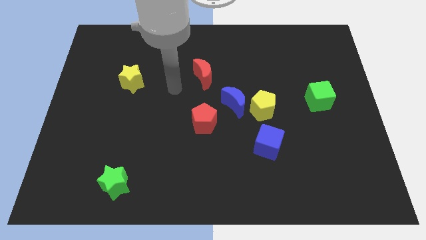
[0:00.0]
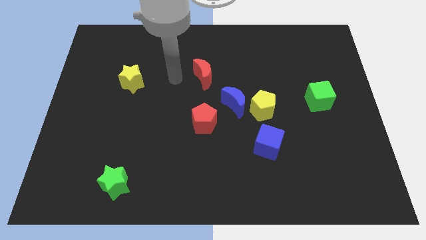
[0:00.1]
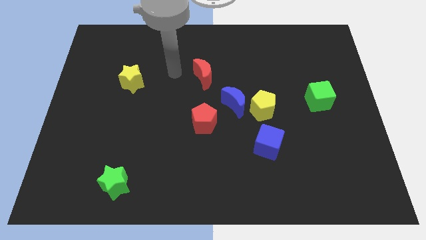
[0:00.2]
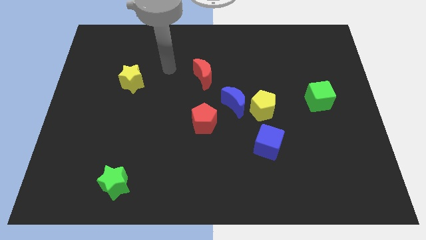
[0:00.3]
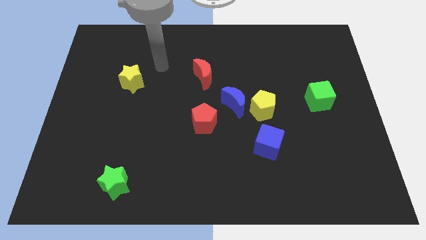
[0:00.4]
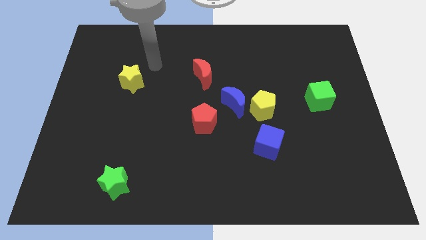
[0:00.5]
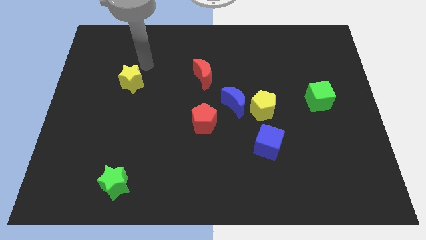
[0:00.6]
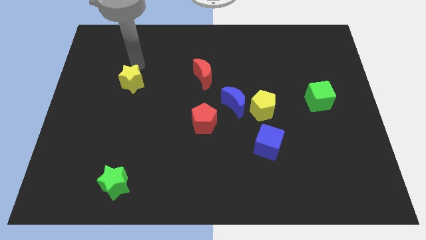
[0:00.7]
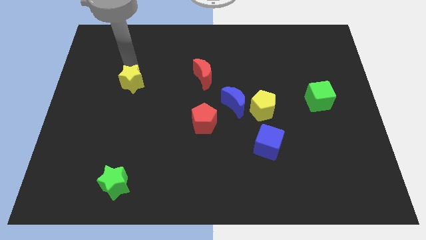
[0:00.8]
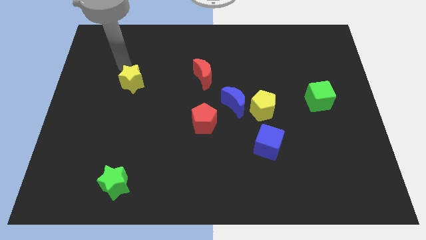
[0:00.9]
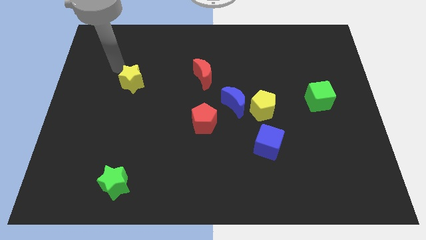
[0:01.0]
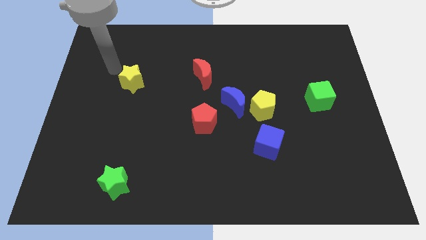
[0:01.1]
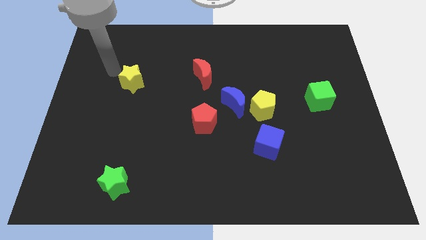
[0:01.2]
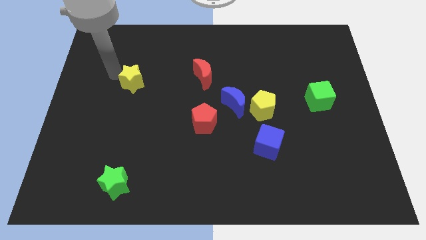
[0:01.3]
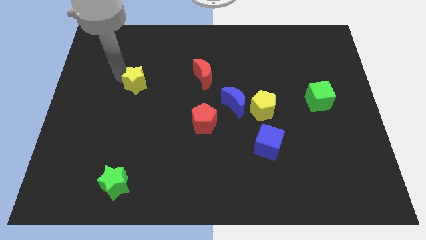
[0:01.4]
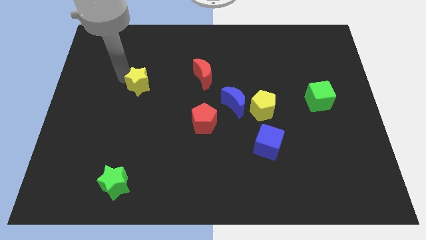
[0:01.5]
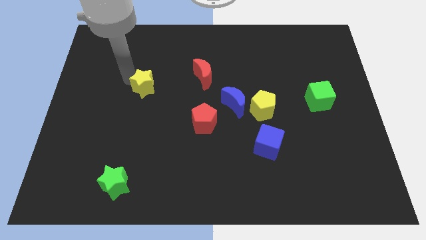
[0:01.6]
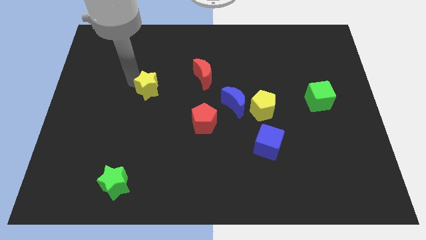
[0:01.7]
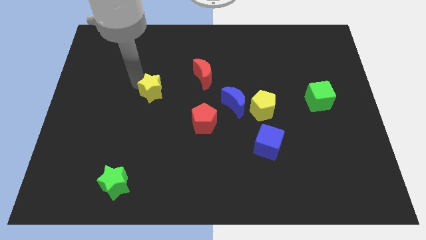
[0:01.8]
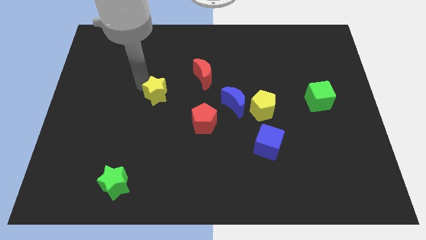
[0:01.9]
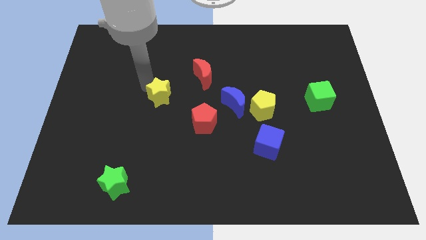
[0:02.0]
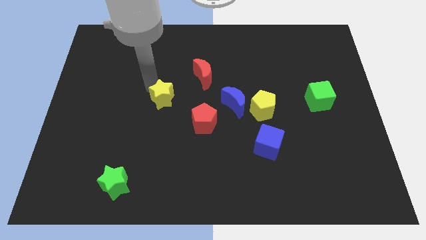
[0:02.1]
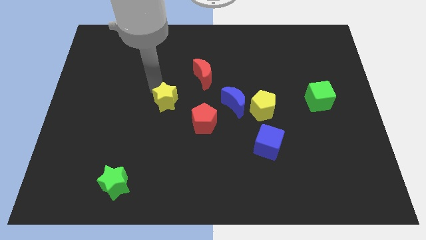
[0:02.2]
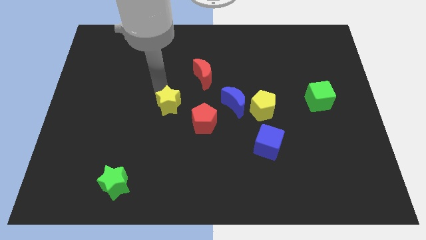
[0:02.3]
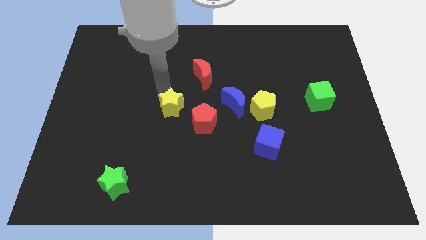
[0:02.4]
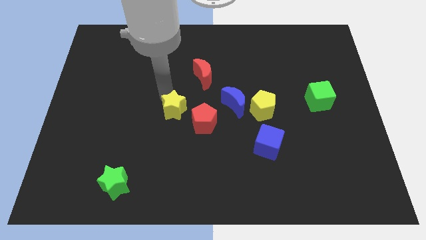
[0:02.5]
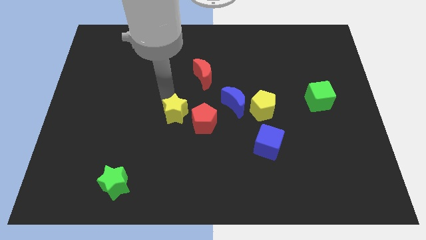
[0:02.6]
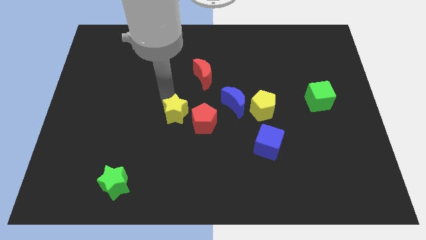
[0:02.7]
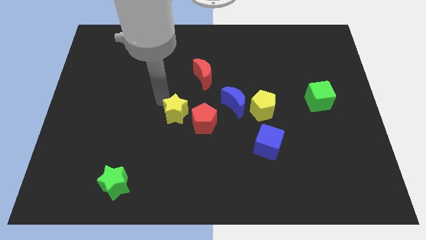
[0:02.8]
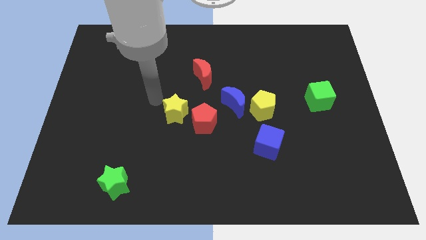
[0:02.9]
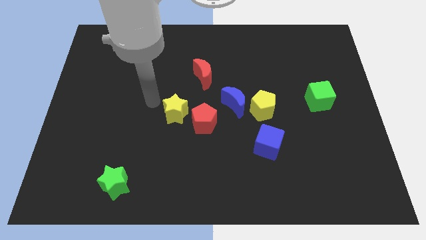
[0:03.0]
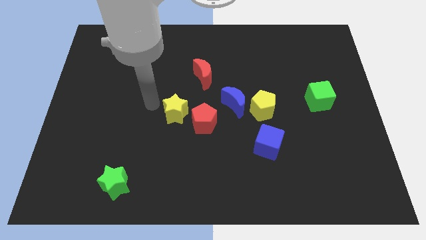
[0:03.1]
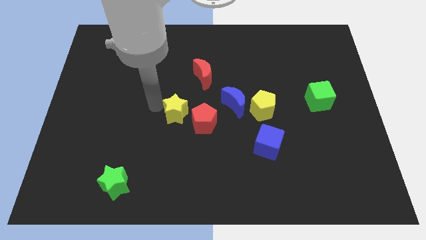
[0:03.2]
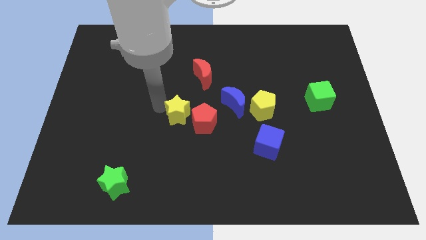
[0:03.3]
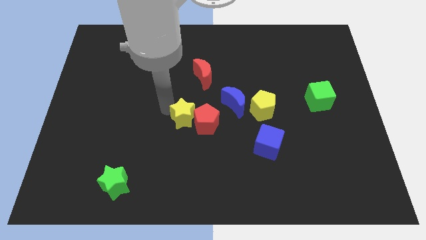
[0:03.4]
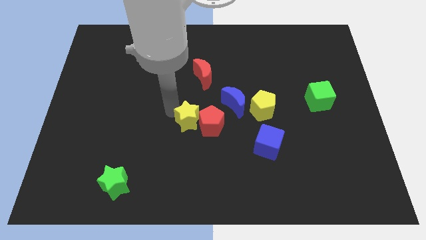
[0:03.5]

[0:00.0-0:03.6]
put the yellow star to the red pentagon

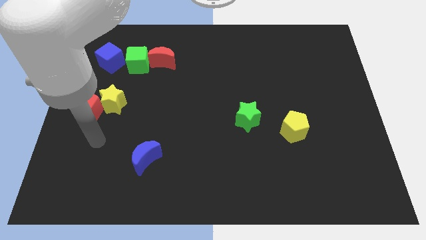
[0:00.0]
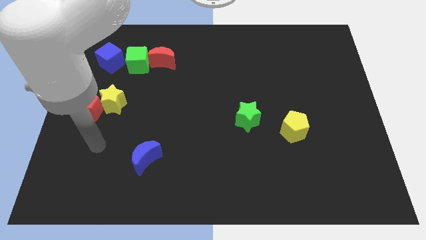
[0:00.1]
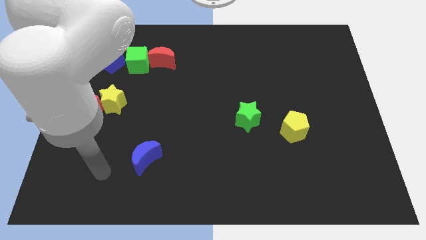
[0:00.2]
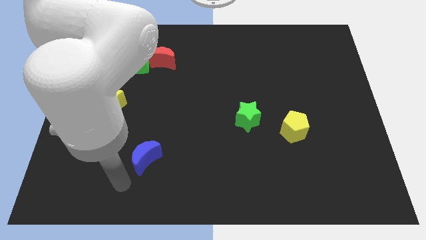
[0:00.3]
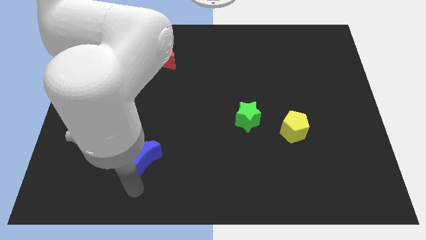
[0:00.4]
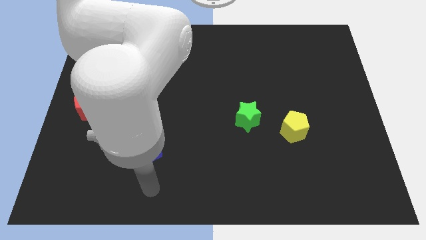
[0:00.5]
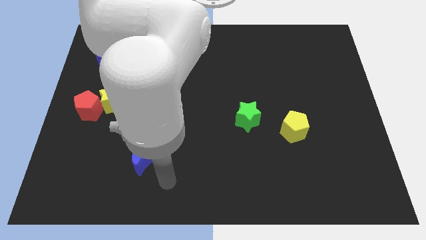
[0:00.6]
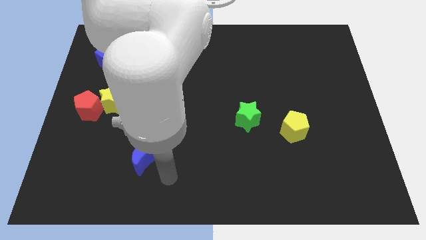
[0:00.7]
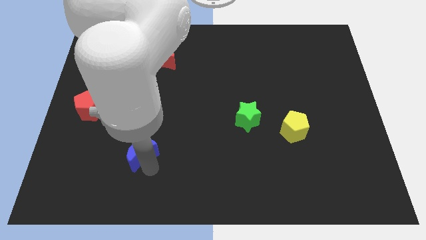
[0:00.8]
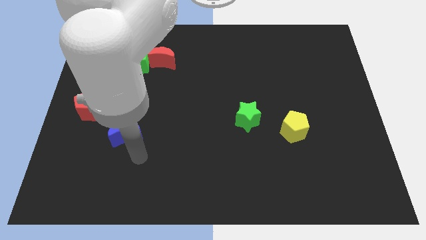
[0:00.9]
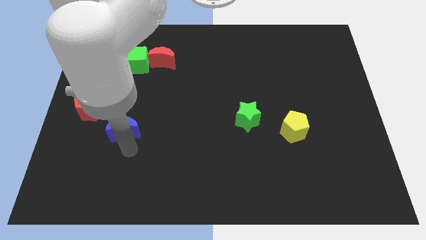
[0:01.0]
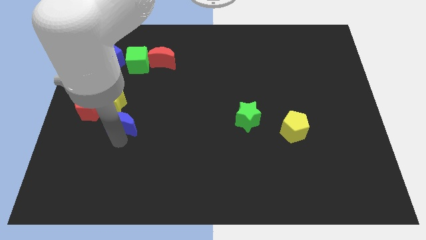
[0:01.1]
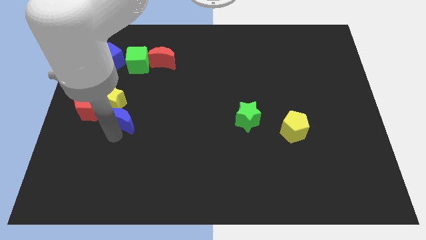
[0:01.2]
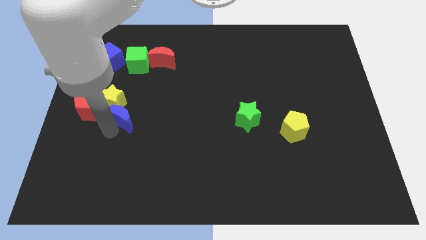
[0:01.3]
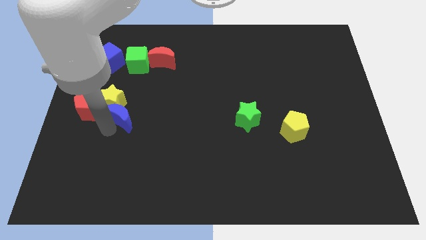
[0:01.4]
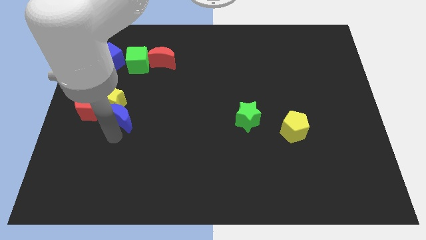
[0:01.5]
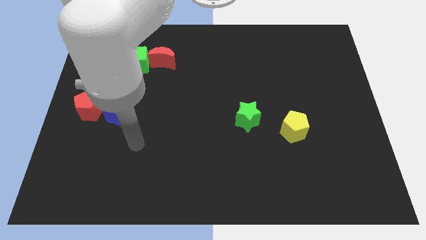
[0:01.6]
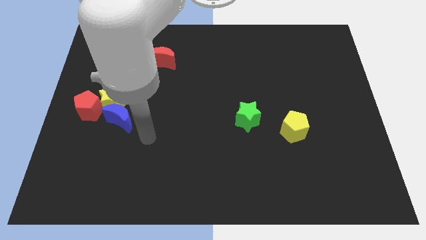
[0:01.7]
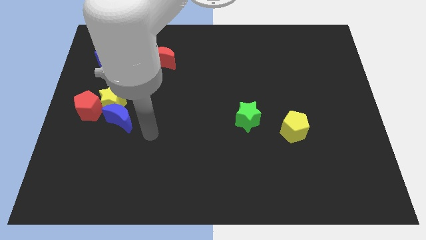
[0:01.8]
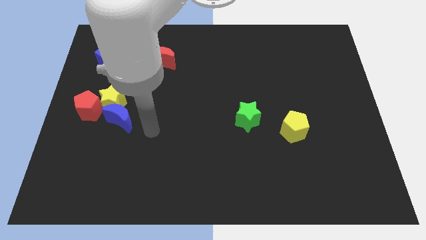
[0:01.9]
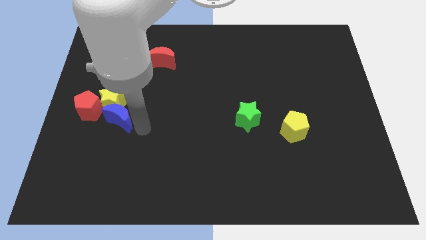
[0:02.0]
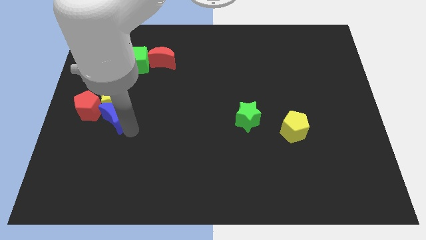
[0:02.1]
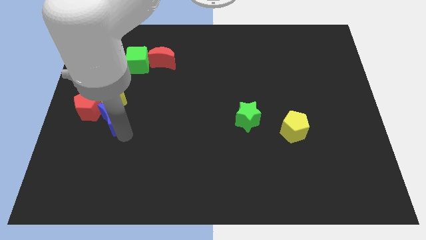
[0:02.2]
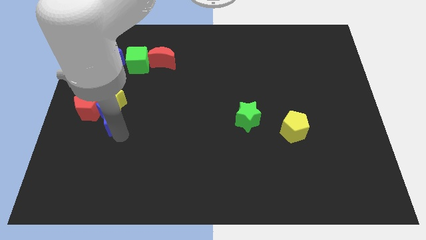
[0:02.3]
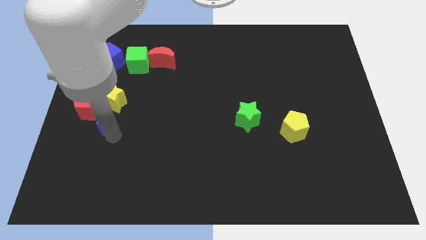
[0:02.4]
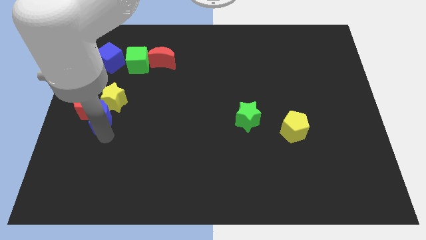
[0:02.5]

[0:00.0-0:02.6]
slide the blue moon close to the red pentagon

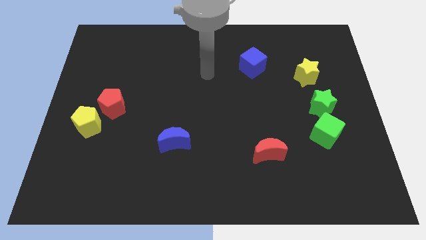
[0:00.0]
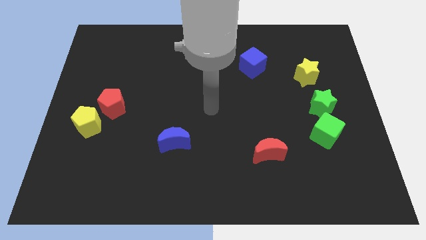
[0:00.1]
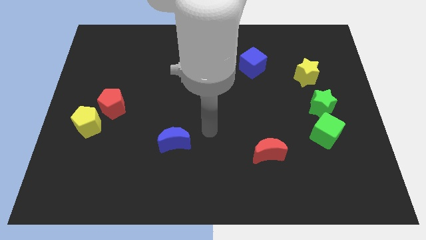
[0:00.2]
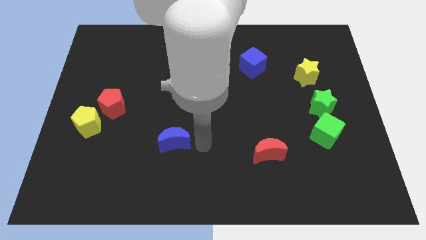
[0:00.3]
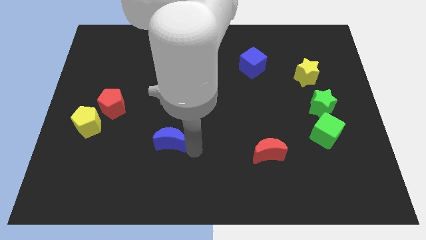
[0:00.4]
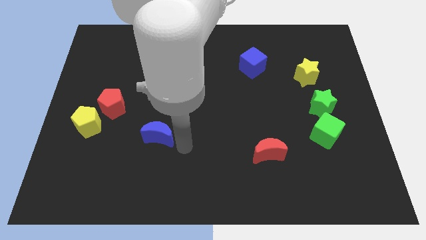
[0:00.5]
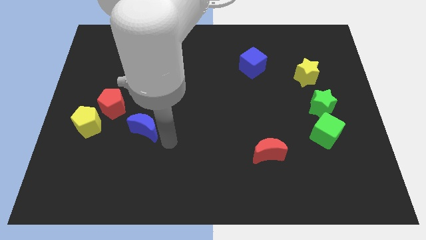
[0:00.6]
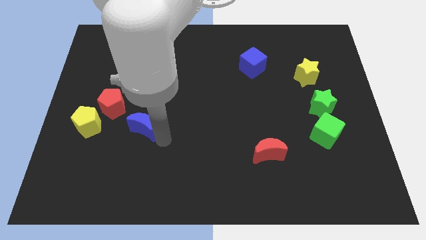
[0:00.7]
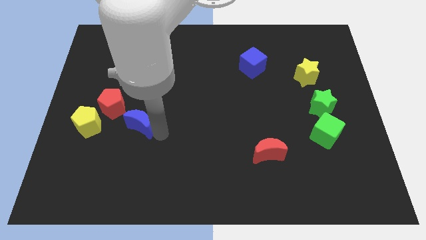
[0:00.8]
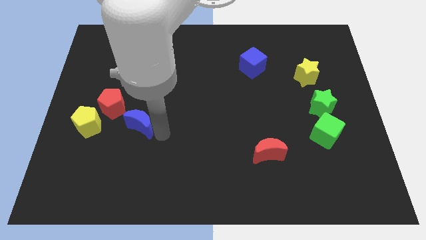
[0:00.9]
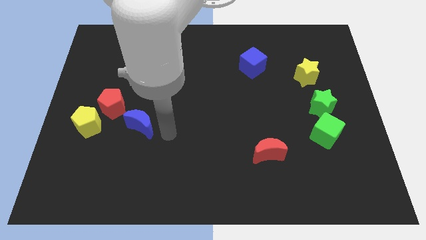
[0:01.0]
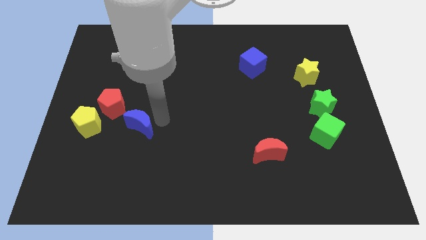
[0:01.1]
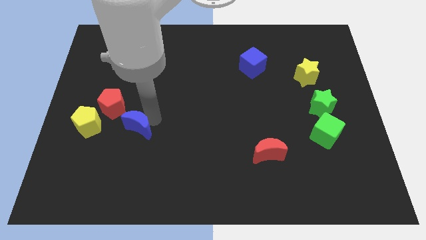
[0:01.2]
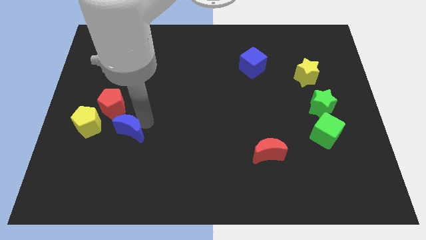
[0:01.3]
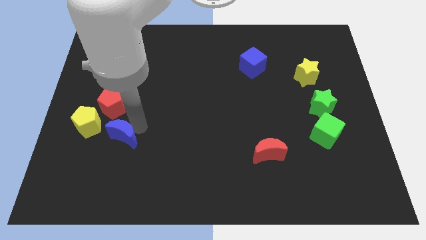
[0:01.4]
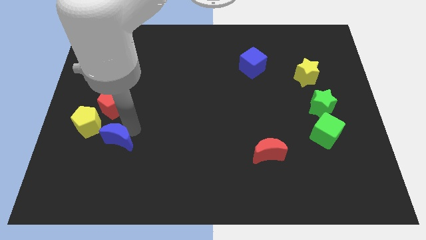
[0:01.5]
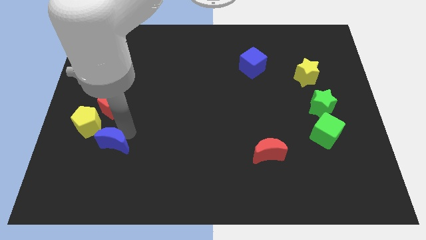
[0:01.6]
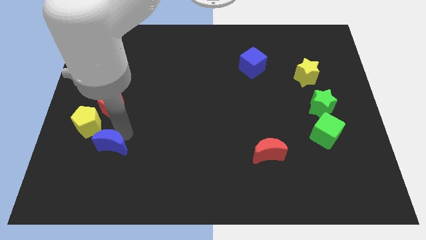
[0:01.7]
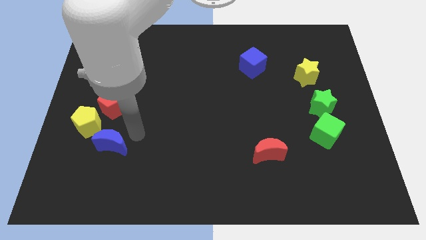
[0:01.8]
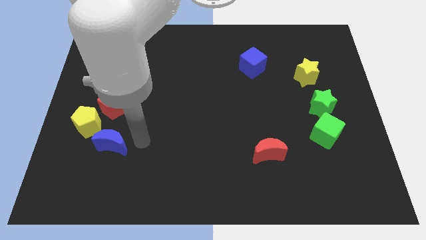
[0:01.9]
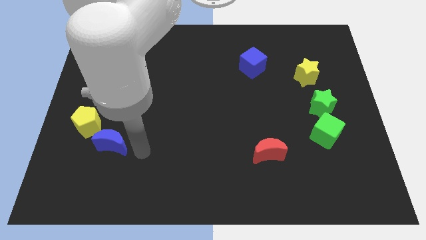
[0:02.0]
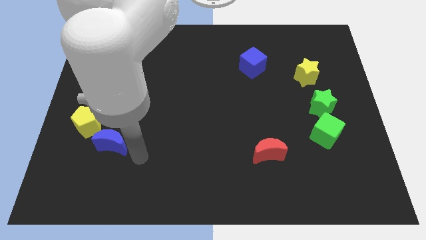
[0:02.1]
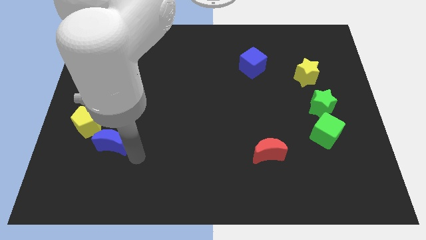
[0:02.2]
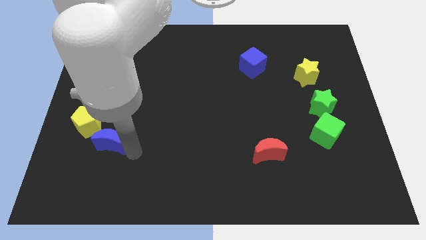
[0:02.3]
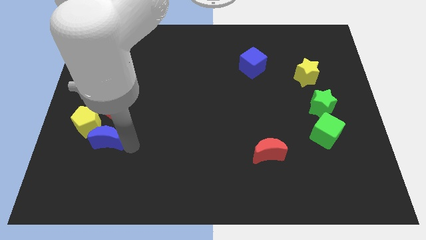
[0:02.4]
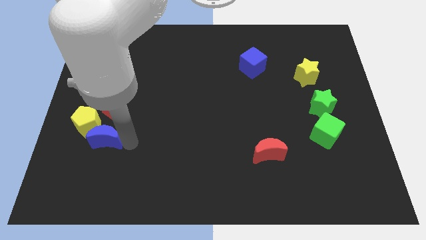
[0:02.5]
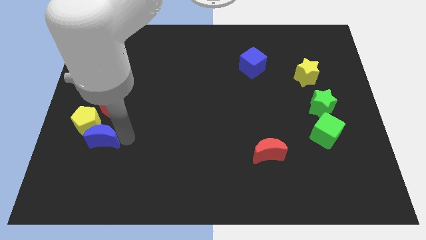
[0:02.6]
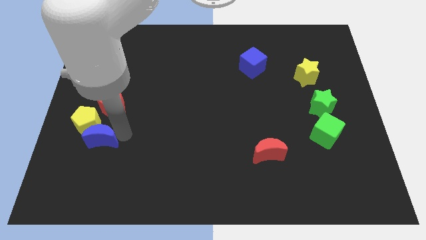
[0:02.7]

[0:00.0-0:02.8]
slide the blue moon to the yellow pentagon
